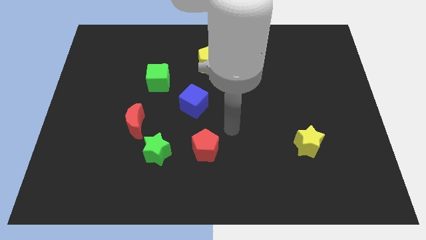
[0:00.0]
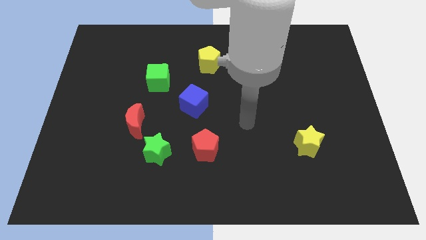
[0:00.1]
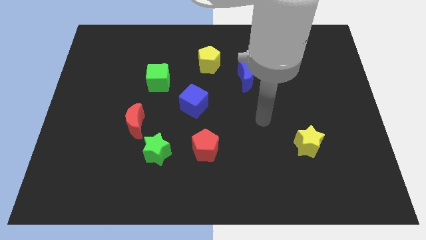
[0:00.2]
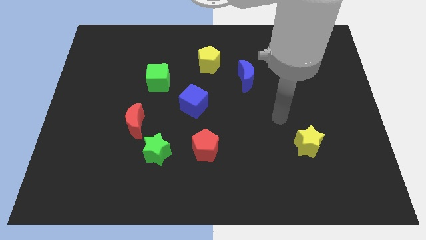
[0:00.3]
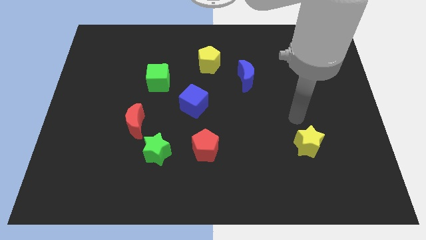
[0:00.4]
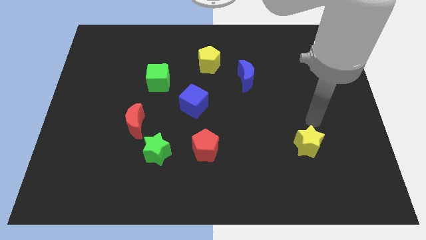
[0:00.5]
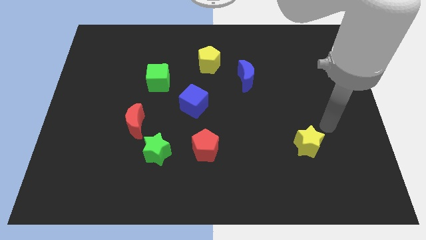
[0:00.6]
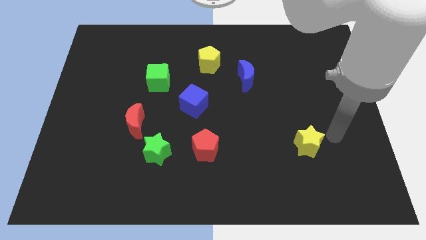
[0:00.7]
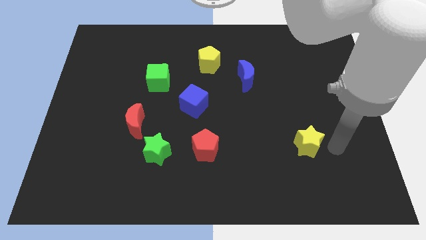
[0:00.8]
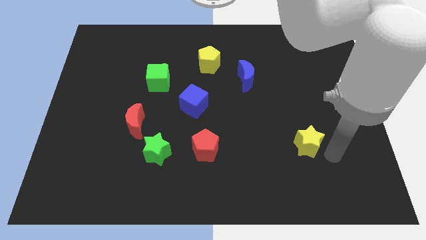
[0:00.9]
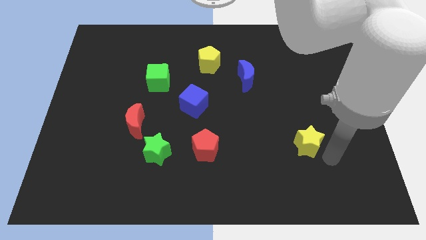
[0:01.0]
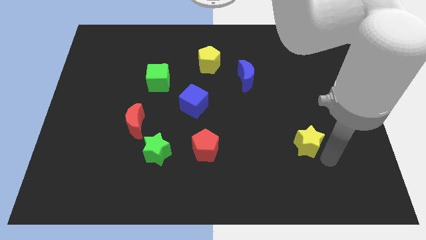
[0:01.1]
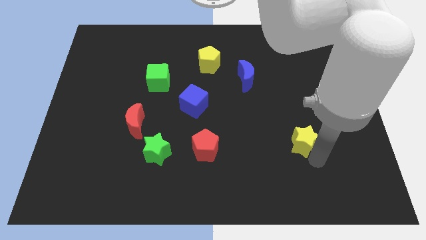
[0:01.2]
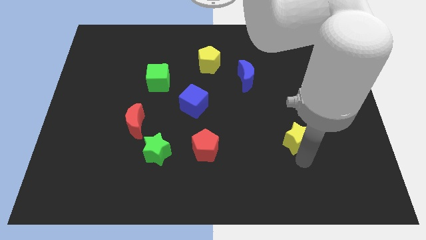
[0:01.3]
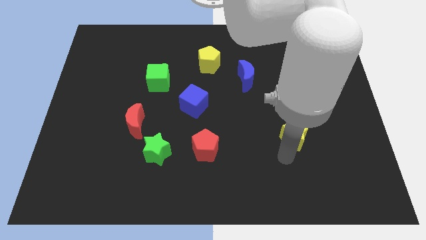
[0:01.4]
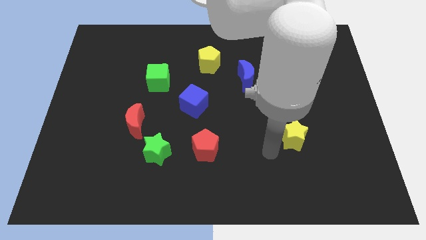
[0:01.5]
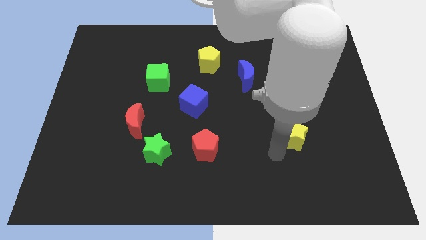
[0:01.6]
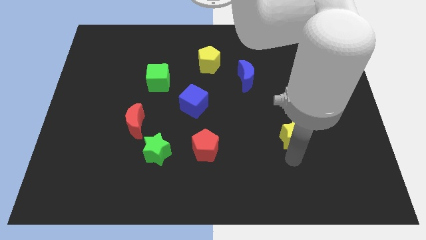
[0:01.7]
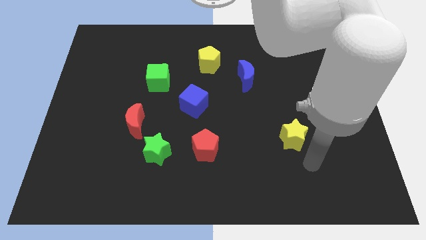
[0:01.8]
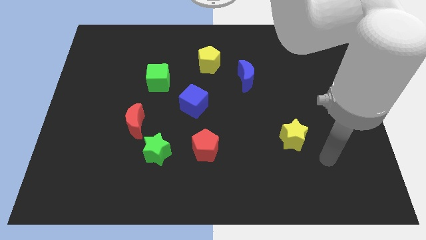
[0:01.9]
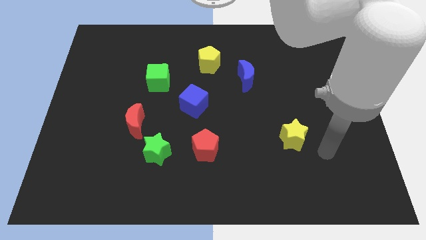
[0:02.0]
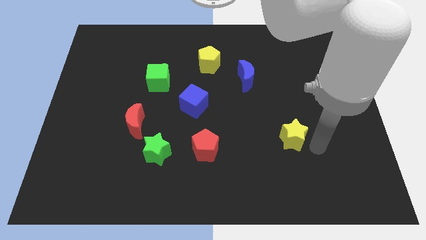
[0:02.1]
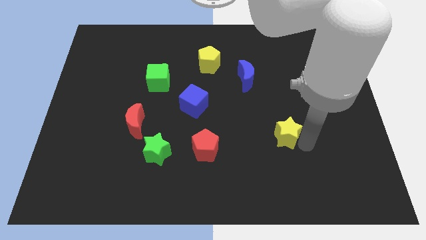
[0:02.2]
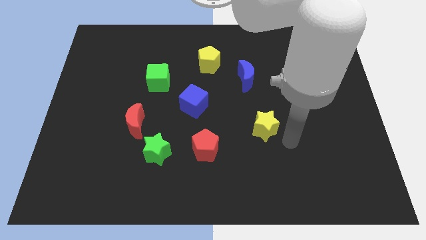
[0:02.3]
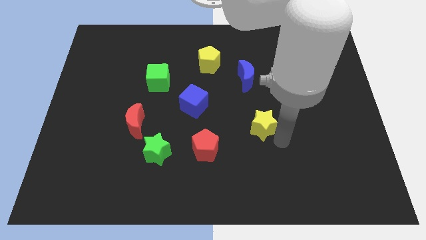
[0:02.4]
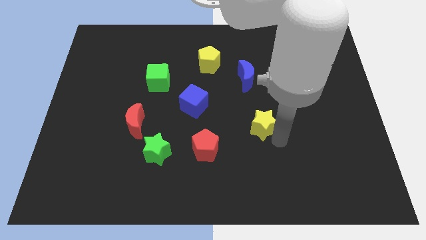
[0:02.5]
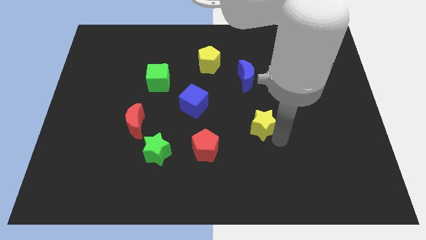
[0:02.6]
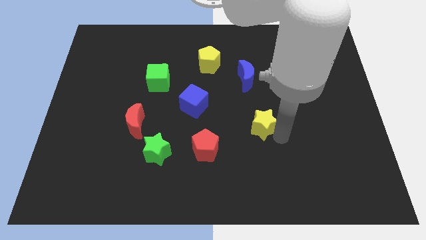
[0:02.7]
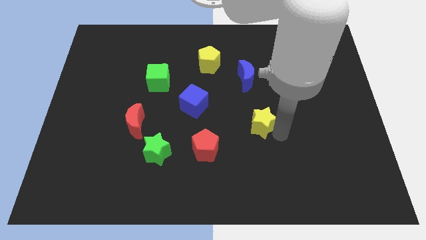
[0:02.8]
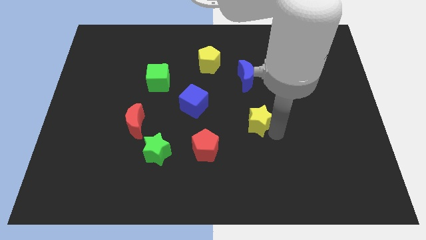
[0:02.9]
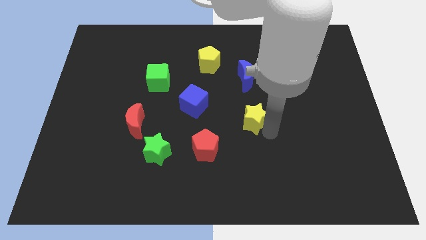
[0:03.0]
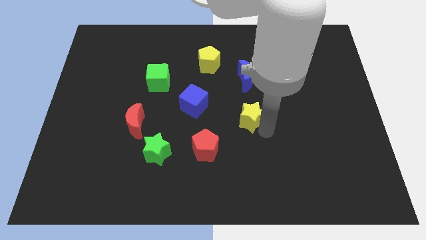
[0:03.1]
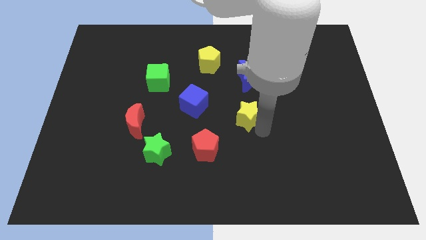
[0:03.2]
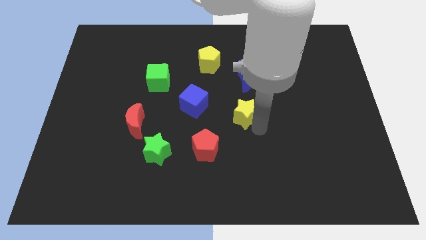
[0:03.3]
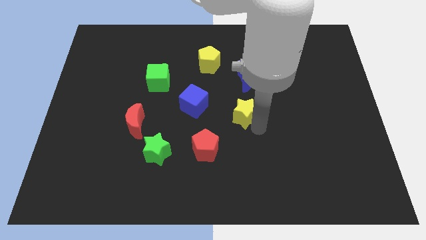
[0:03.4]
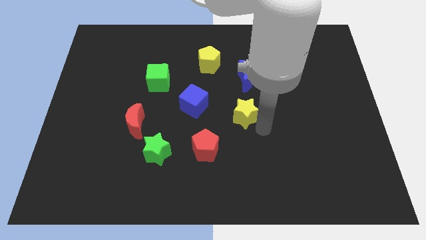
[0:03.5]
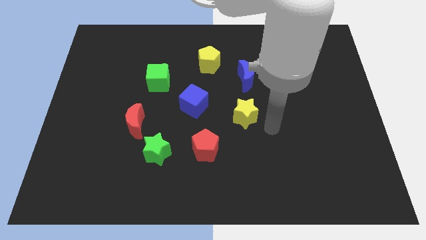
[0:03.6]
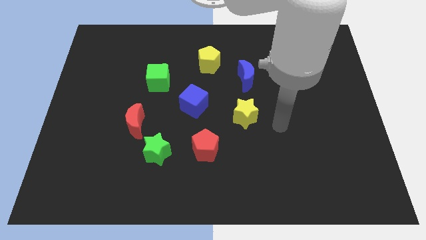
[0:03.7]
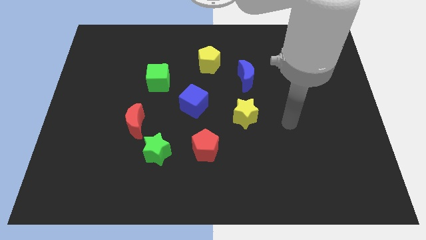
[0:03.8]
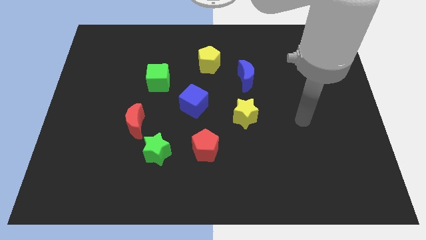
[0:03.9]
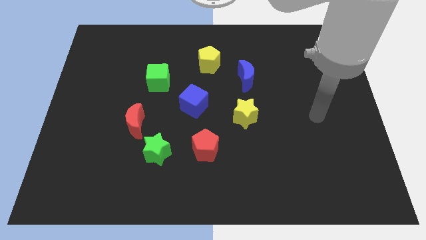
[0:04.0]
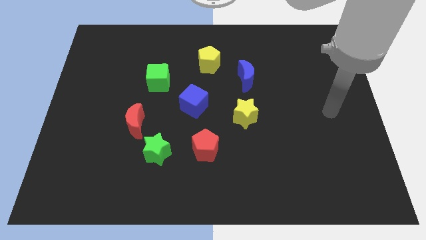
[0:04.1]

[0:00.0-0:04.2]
push the yellow star below the blue crescent

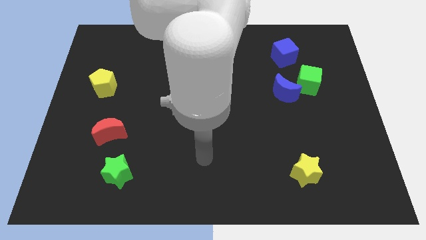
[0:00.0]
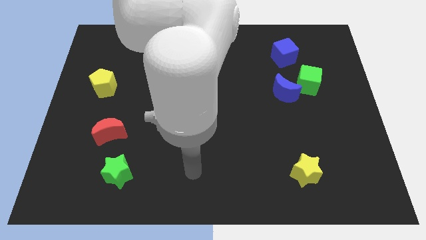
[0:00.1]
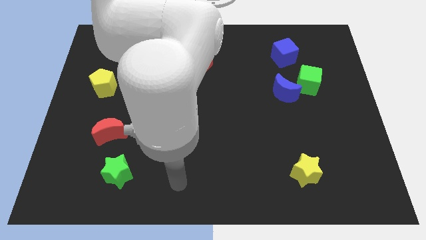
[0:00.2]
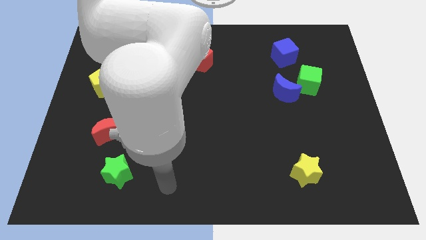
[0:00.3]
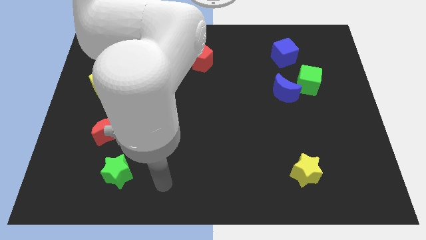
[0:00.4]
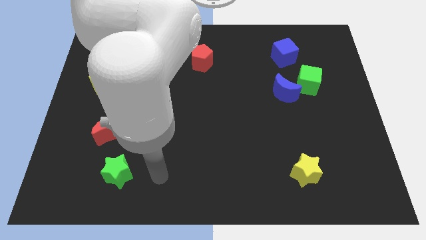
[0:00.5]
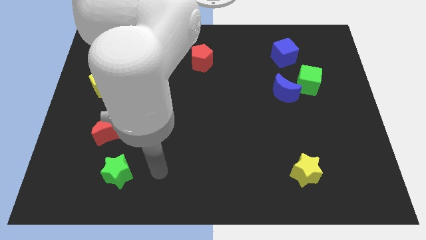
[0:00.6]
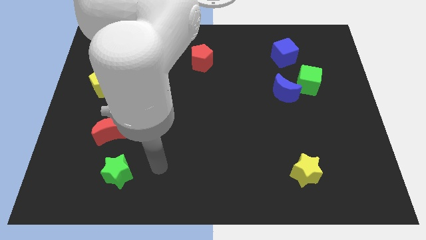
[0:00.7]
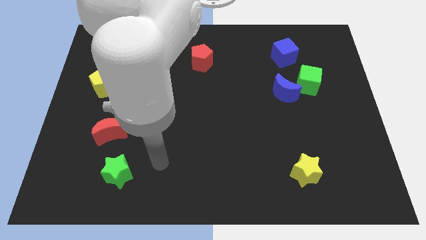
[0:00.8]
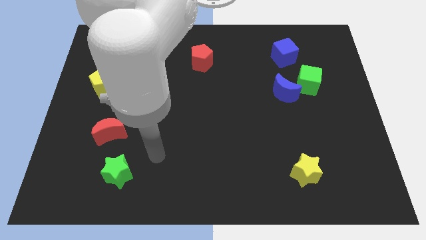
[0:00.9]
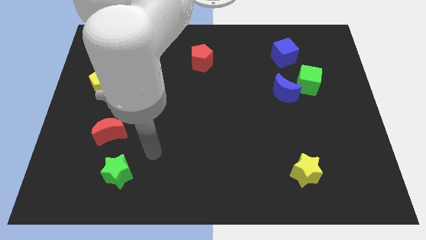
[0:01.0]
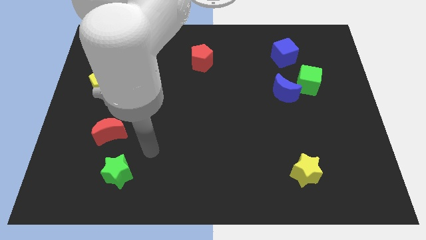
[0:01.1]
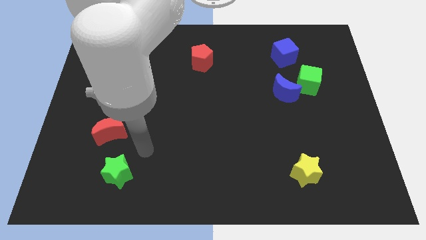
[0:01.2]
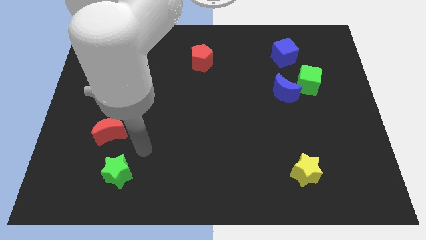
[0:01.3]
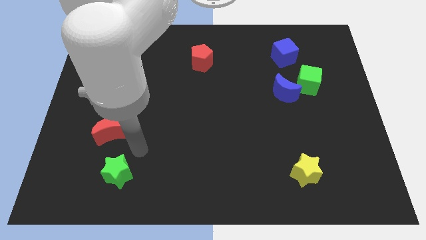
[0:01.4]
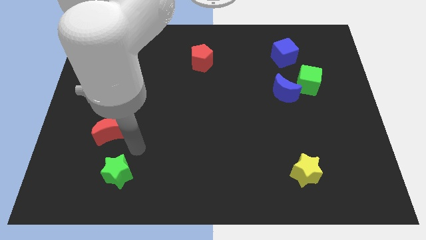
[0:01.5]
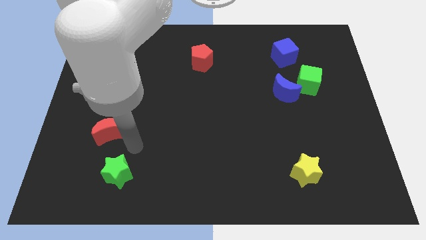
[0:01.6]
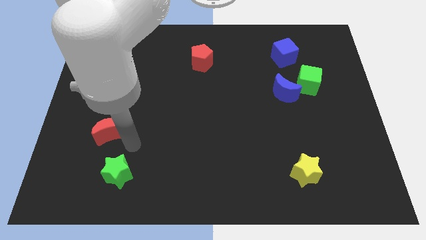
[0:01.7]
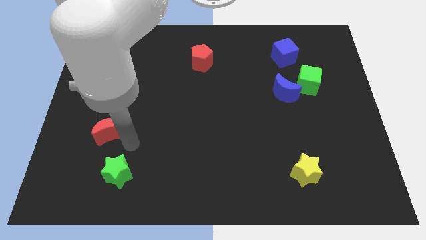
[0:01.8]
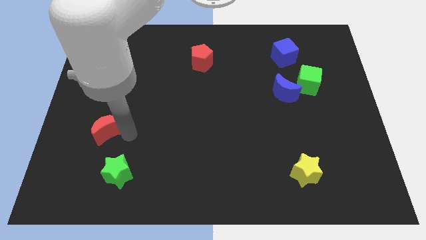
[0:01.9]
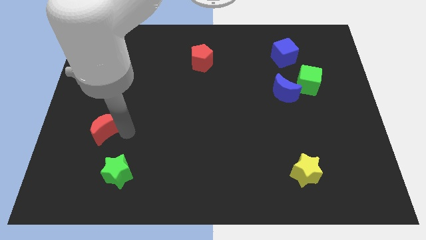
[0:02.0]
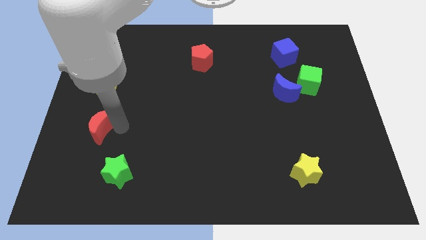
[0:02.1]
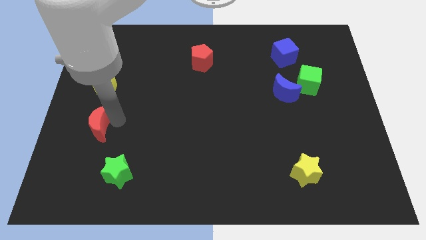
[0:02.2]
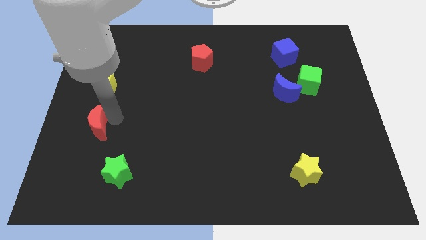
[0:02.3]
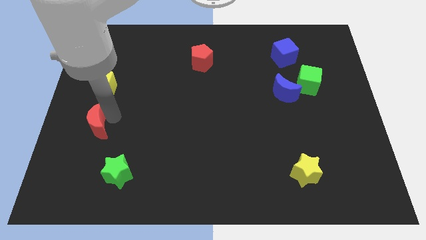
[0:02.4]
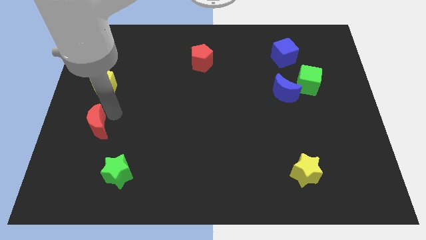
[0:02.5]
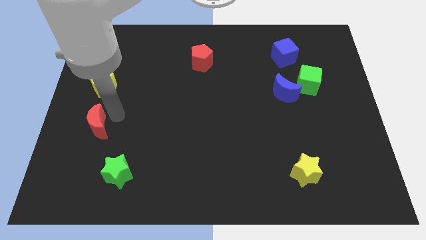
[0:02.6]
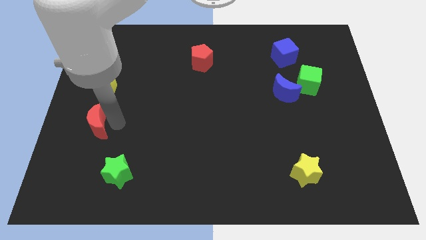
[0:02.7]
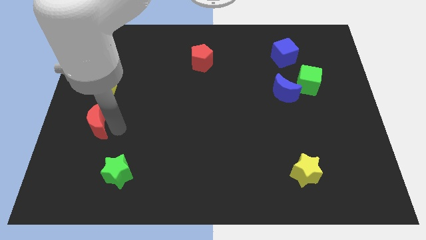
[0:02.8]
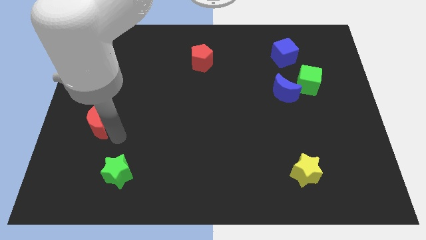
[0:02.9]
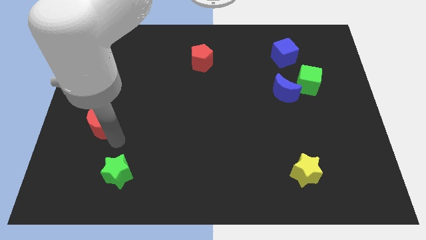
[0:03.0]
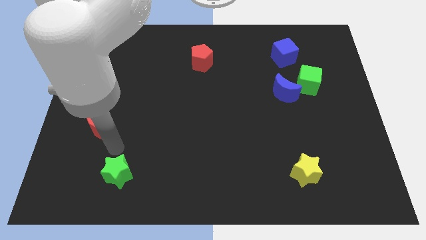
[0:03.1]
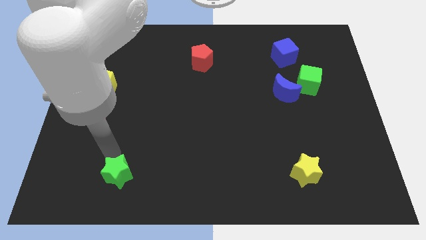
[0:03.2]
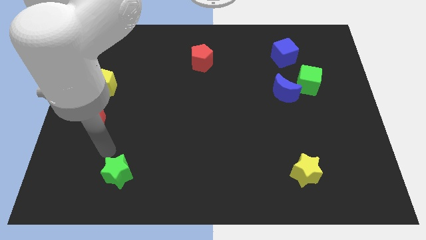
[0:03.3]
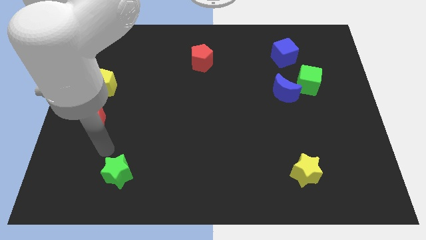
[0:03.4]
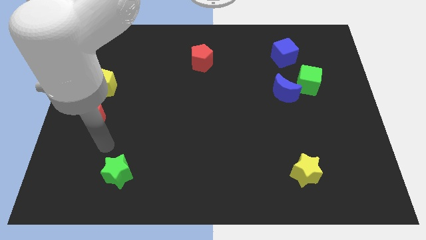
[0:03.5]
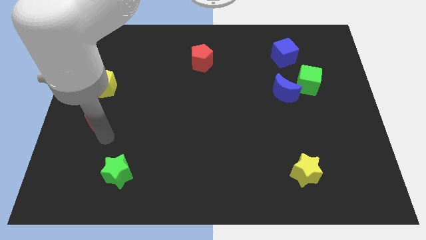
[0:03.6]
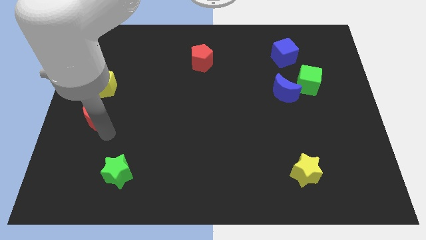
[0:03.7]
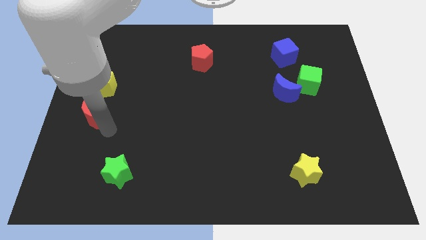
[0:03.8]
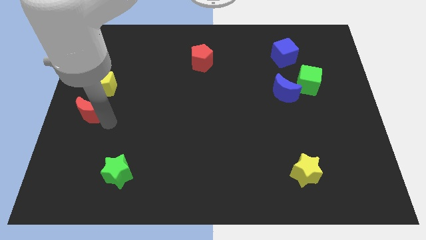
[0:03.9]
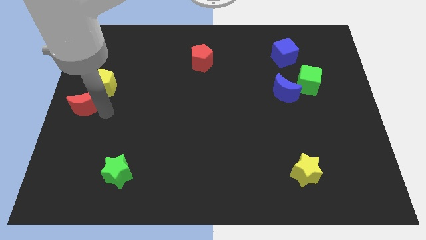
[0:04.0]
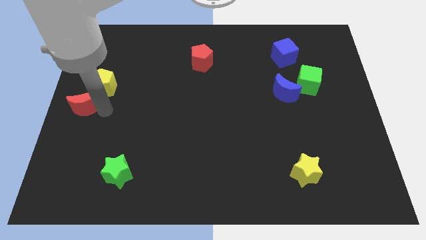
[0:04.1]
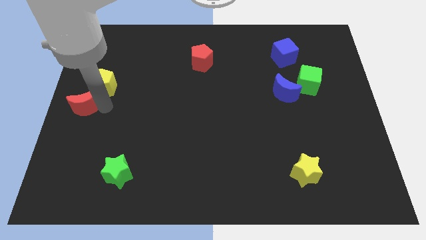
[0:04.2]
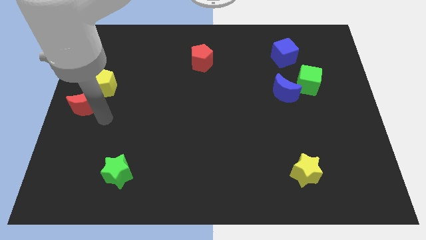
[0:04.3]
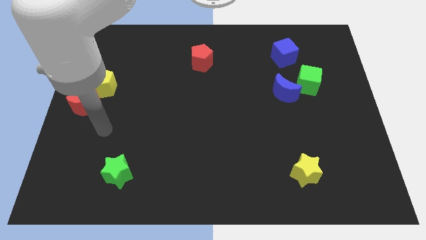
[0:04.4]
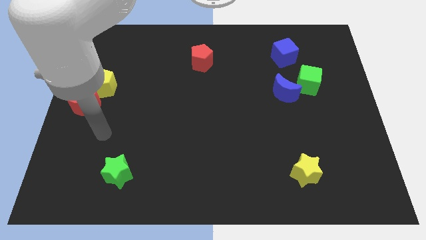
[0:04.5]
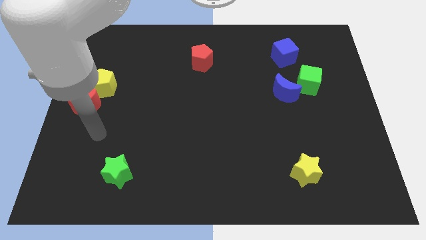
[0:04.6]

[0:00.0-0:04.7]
move the red moon closer to the yellow pentagon
